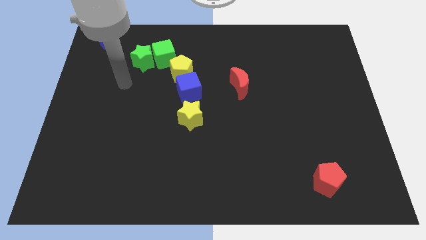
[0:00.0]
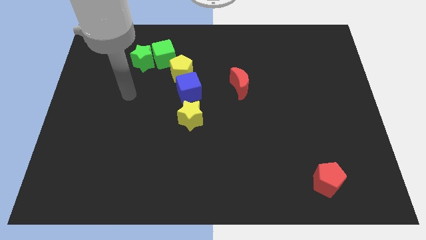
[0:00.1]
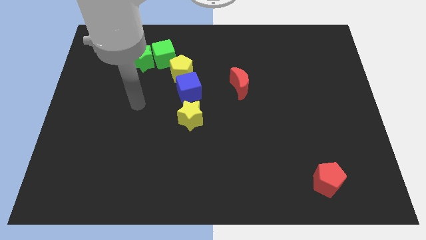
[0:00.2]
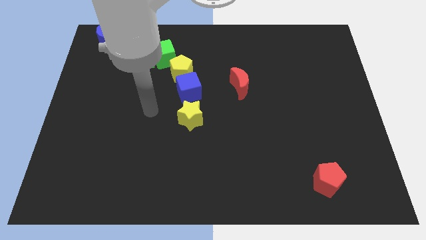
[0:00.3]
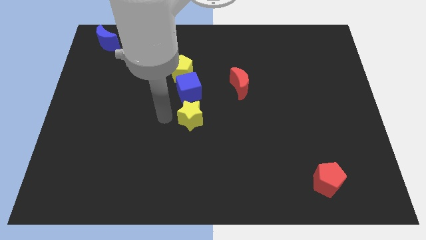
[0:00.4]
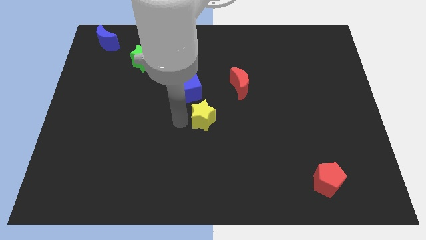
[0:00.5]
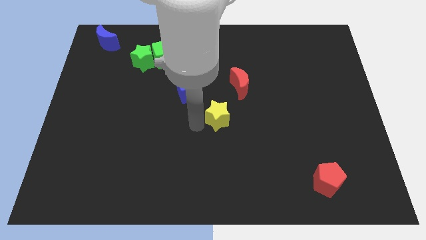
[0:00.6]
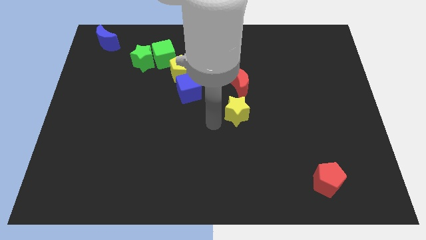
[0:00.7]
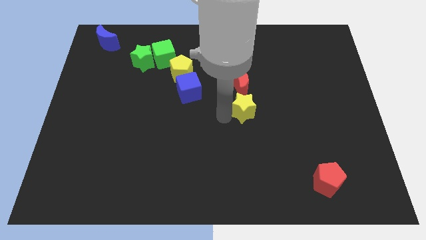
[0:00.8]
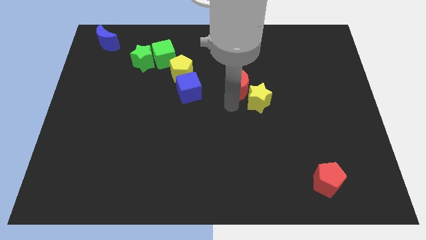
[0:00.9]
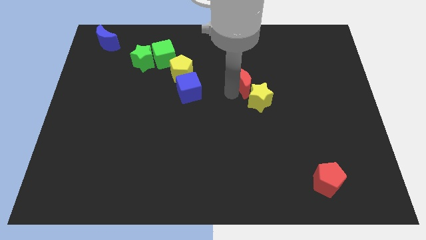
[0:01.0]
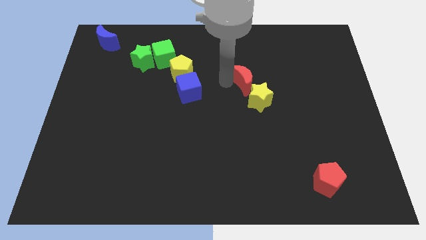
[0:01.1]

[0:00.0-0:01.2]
place the yellow star under the red crescent

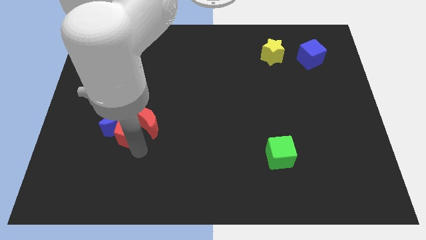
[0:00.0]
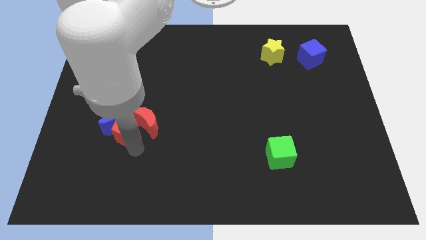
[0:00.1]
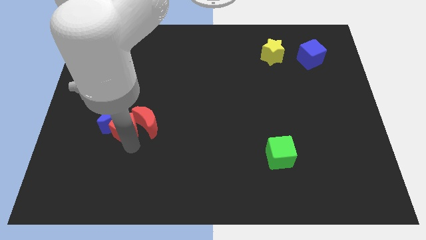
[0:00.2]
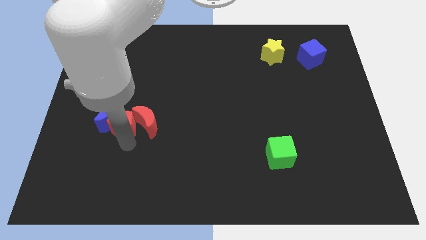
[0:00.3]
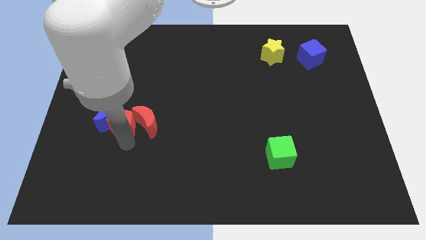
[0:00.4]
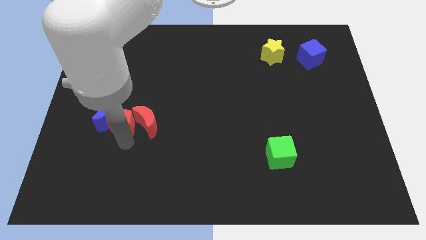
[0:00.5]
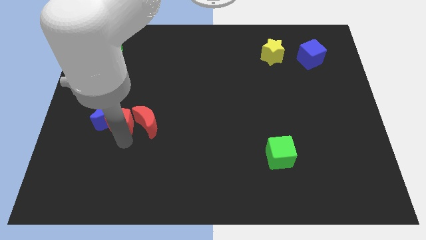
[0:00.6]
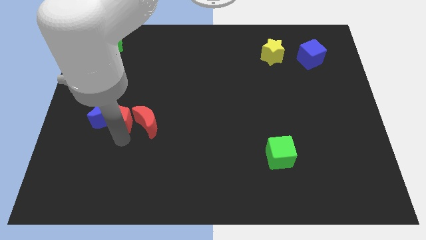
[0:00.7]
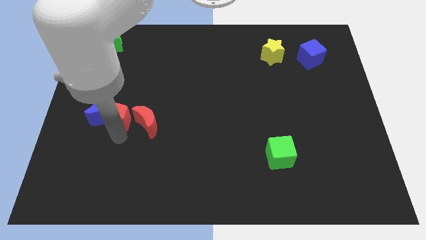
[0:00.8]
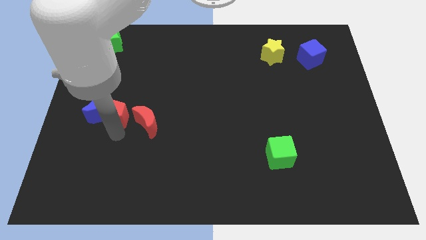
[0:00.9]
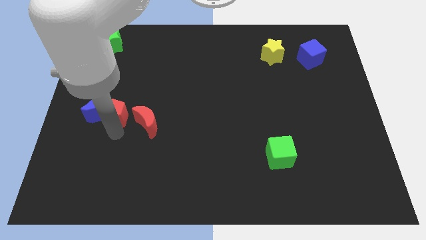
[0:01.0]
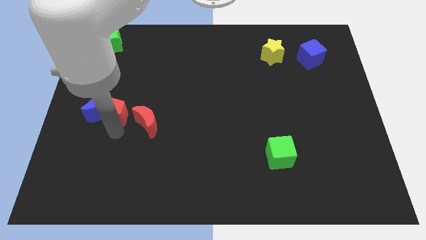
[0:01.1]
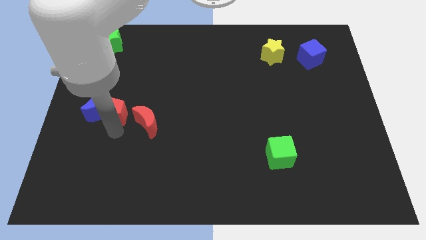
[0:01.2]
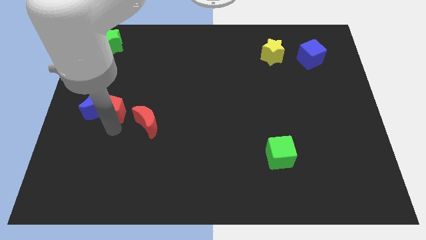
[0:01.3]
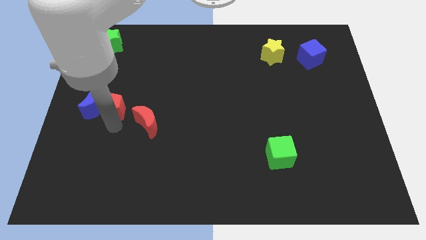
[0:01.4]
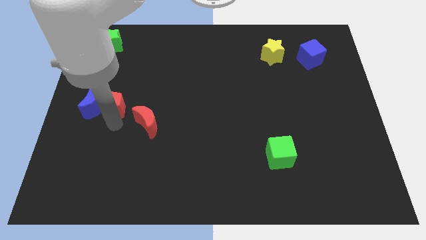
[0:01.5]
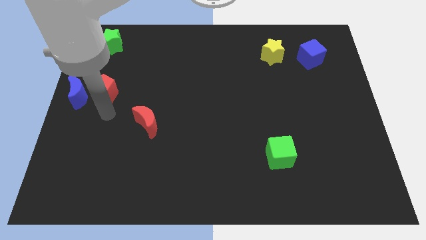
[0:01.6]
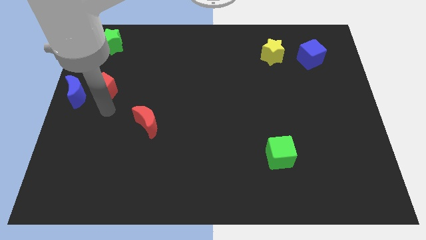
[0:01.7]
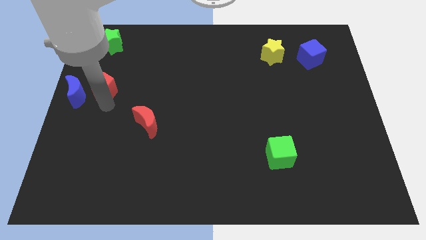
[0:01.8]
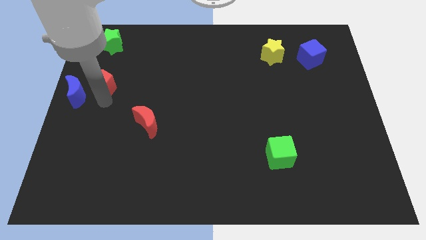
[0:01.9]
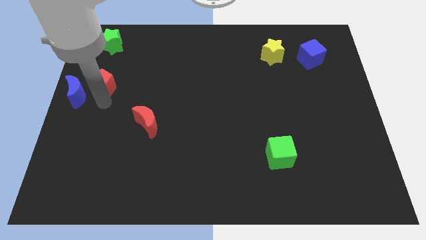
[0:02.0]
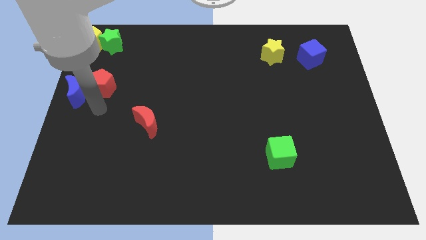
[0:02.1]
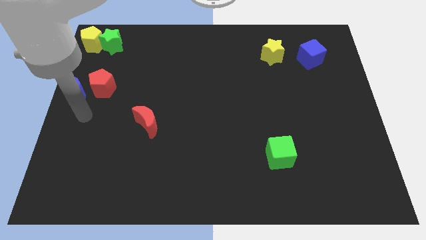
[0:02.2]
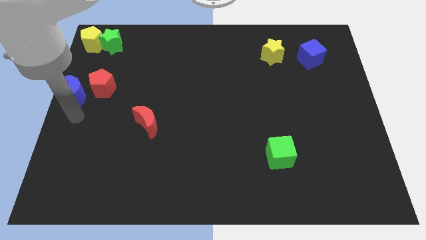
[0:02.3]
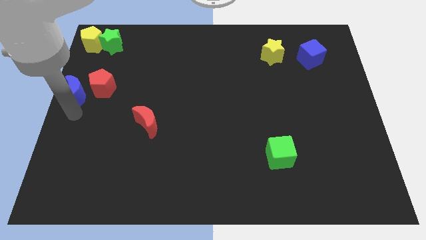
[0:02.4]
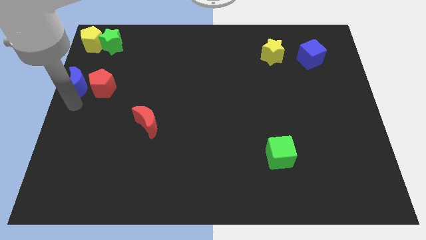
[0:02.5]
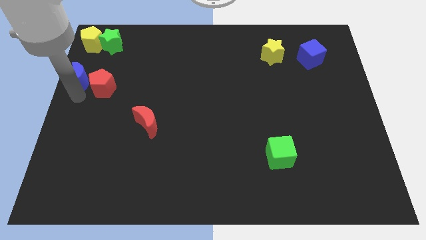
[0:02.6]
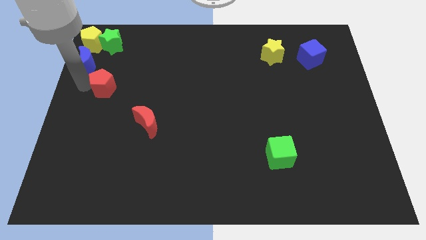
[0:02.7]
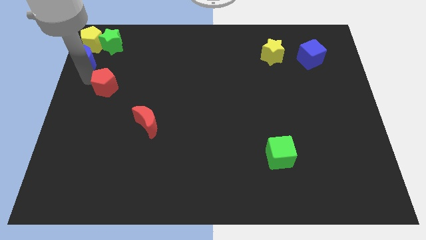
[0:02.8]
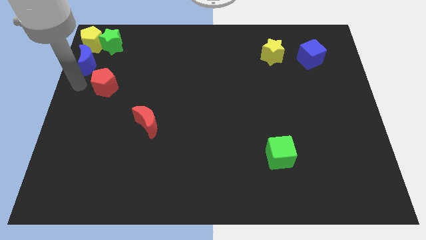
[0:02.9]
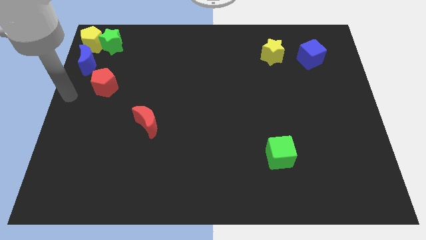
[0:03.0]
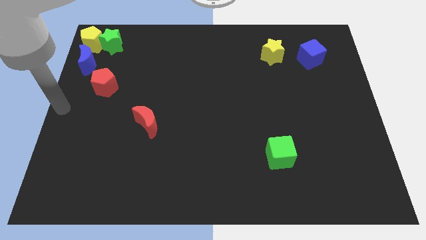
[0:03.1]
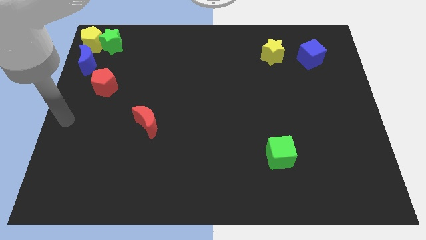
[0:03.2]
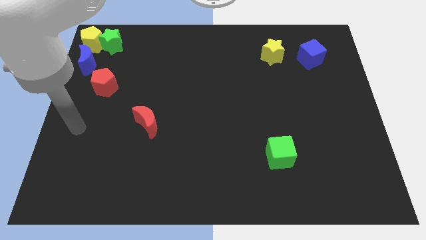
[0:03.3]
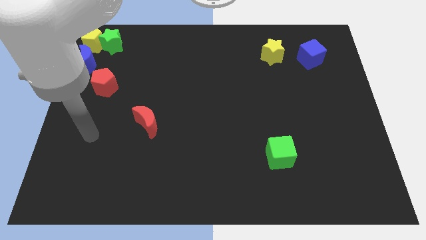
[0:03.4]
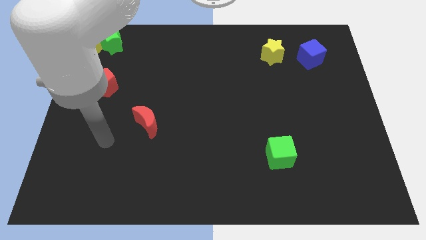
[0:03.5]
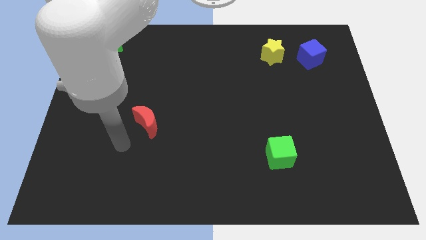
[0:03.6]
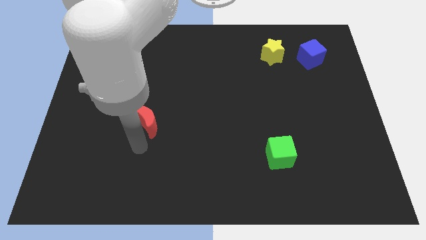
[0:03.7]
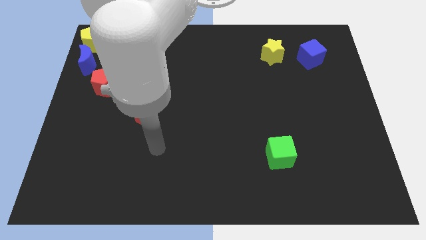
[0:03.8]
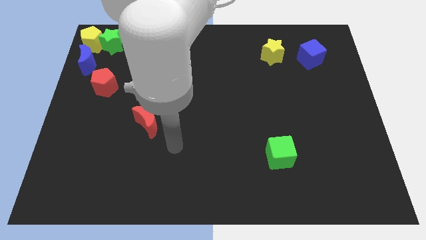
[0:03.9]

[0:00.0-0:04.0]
place the blue moon under the yellow pentagon

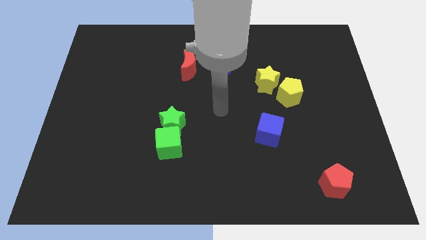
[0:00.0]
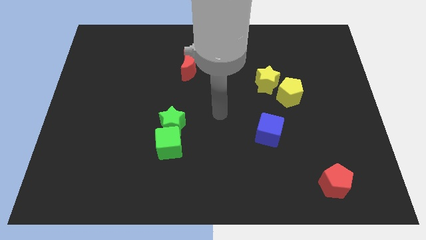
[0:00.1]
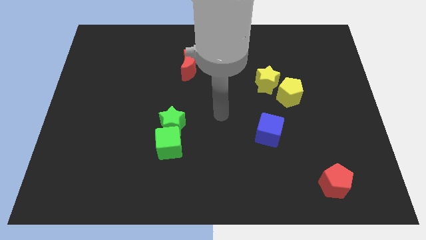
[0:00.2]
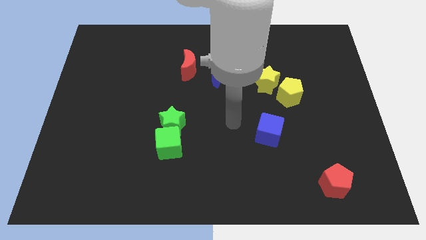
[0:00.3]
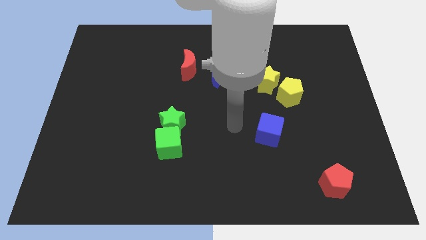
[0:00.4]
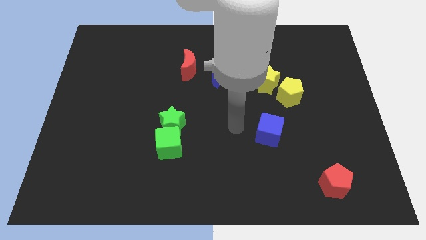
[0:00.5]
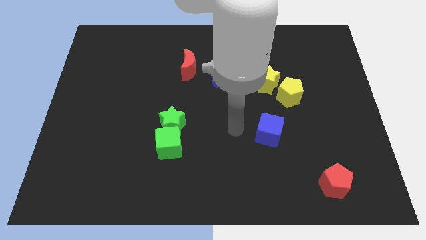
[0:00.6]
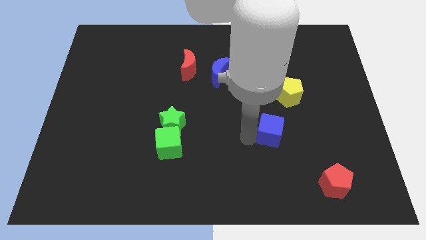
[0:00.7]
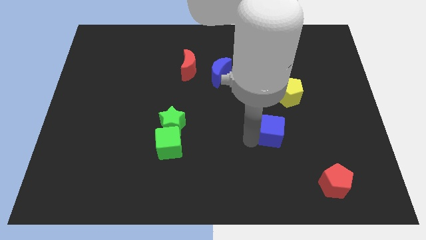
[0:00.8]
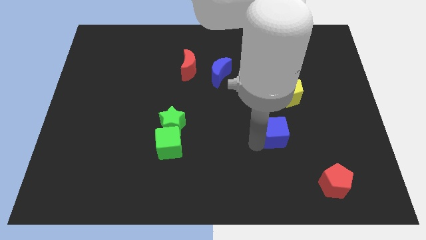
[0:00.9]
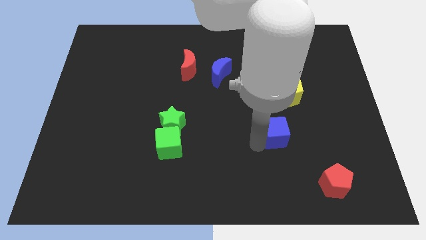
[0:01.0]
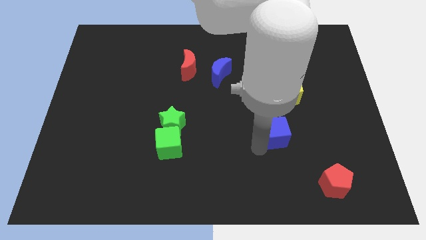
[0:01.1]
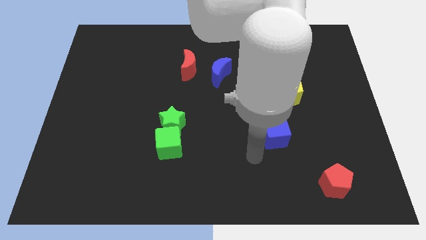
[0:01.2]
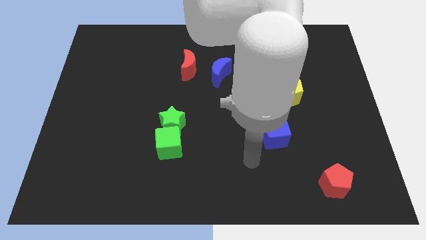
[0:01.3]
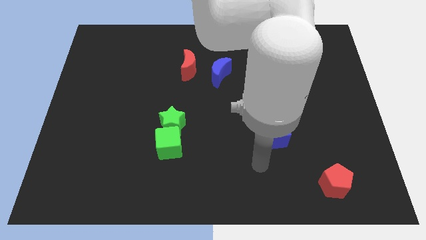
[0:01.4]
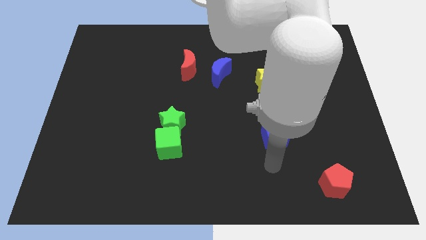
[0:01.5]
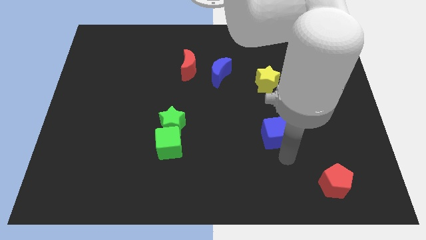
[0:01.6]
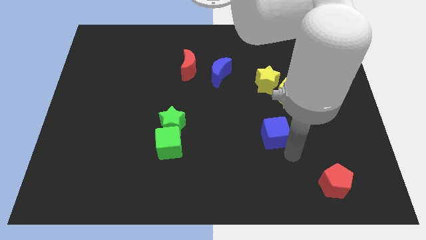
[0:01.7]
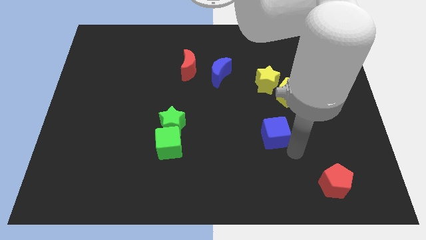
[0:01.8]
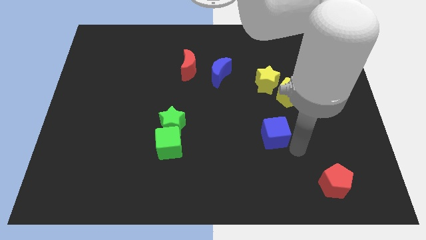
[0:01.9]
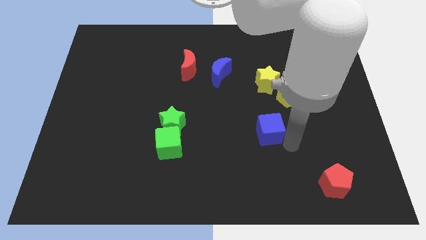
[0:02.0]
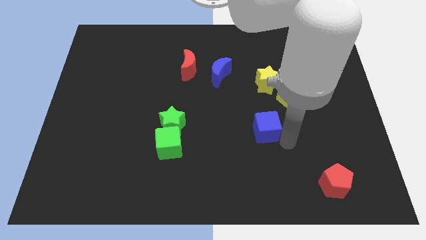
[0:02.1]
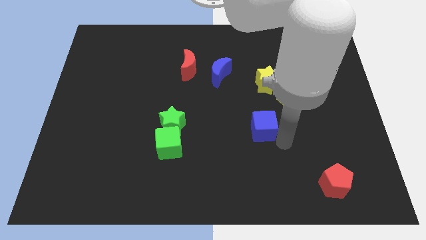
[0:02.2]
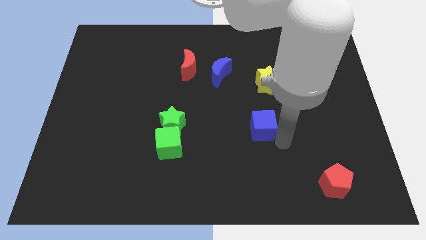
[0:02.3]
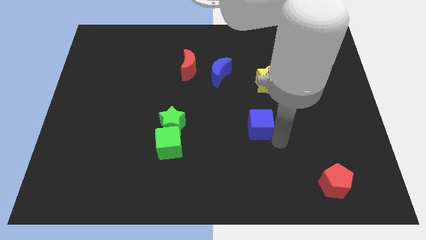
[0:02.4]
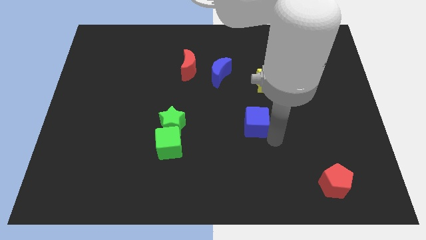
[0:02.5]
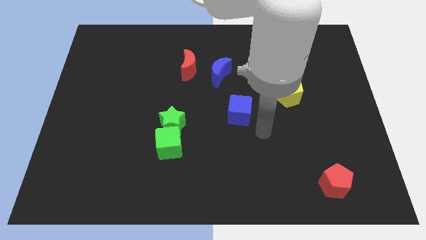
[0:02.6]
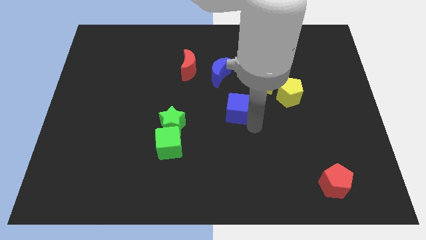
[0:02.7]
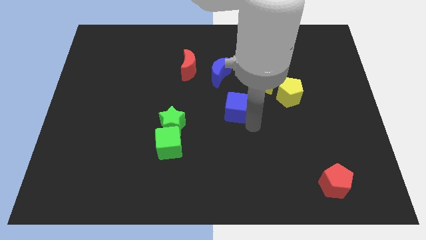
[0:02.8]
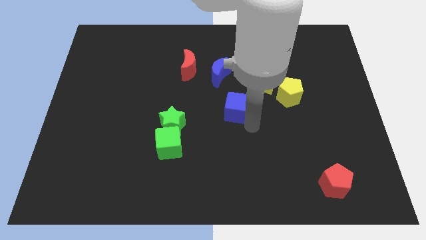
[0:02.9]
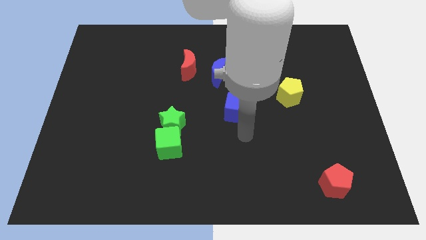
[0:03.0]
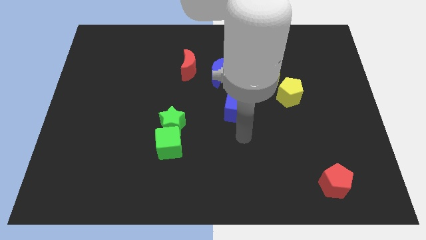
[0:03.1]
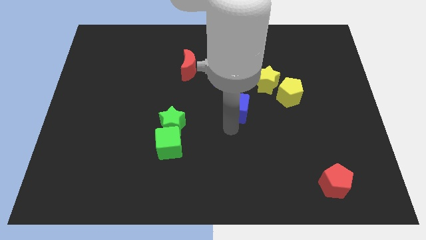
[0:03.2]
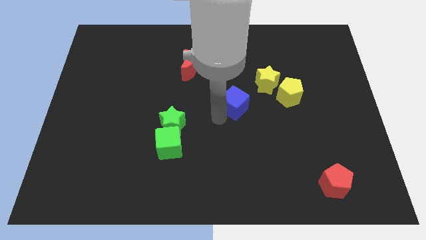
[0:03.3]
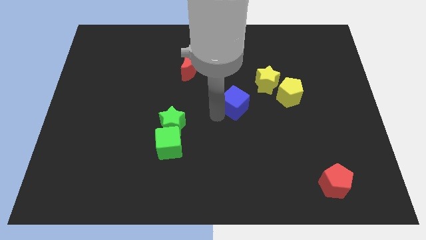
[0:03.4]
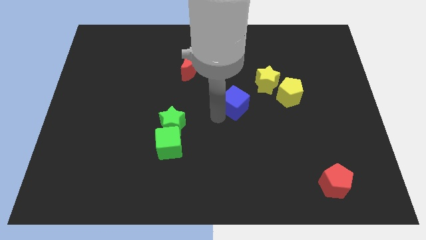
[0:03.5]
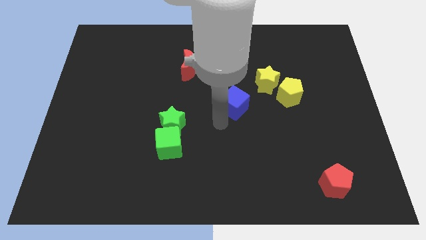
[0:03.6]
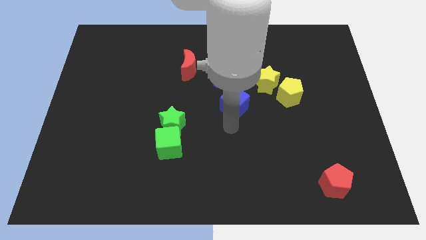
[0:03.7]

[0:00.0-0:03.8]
place the blue cube below the blue moon
